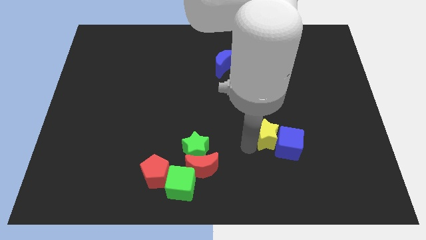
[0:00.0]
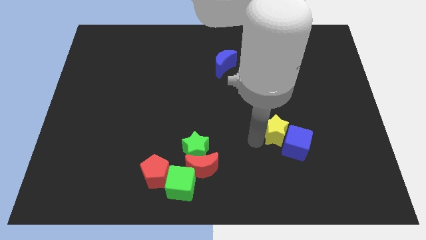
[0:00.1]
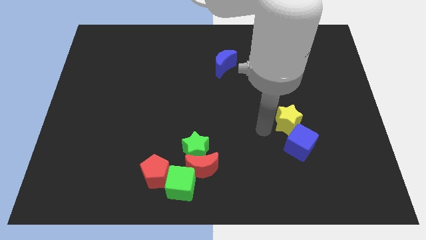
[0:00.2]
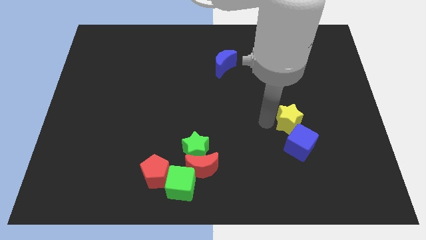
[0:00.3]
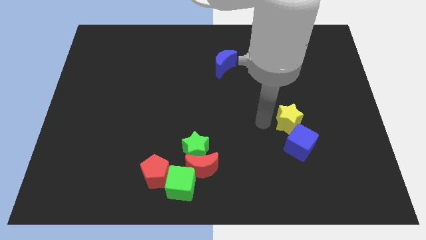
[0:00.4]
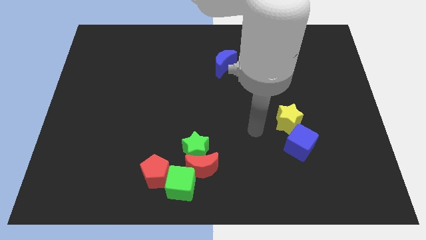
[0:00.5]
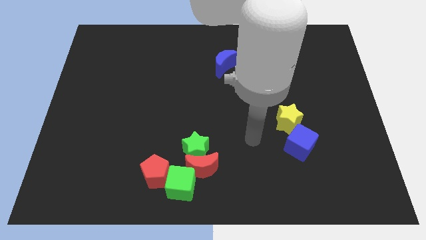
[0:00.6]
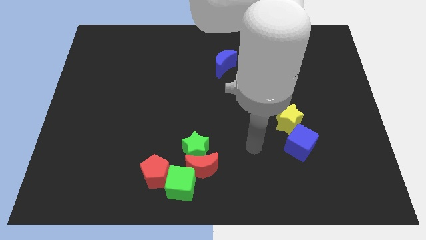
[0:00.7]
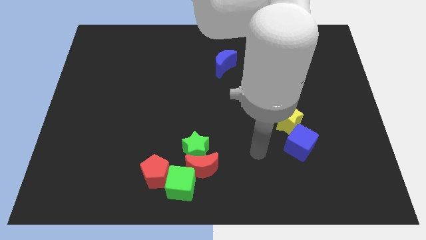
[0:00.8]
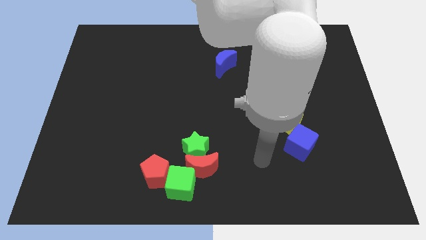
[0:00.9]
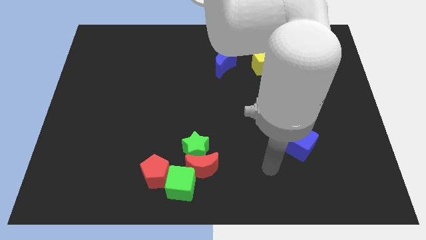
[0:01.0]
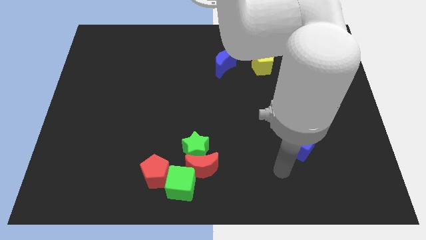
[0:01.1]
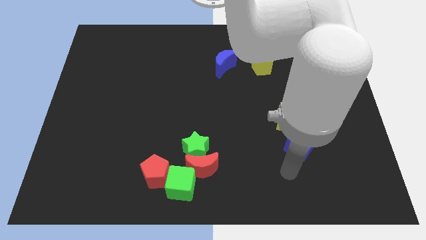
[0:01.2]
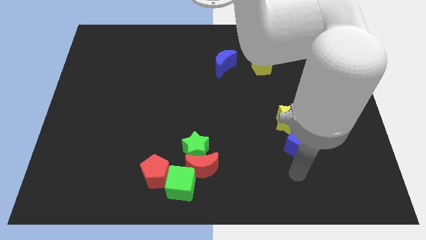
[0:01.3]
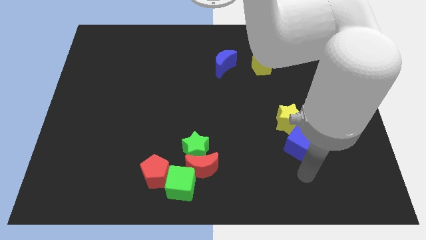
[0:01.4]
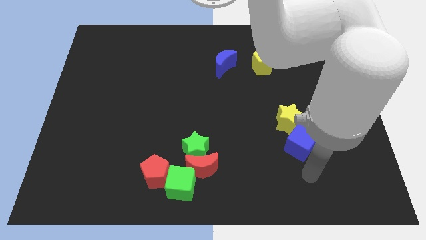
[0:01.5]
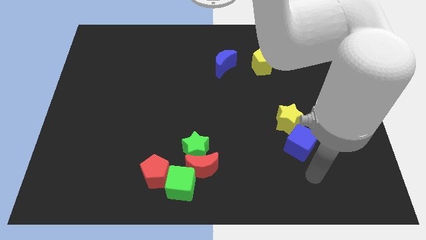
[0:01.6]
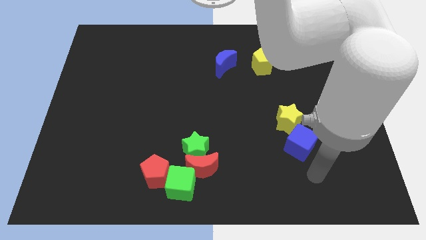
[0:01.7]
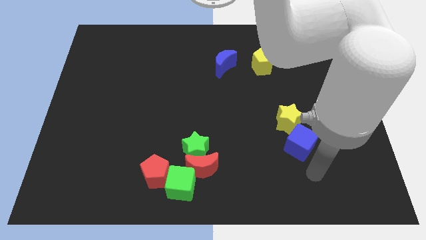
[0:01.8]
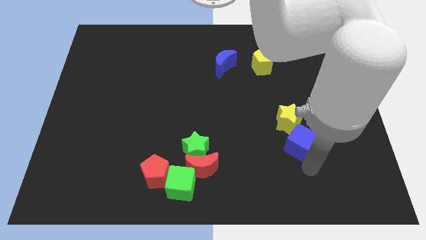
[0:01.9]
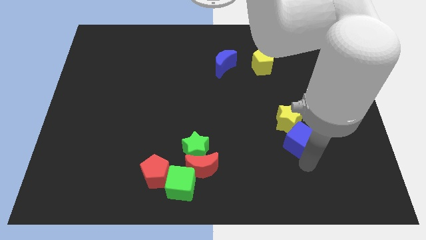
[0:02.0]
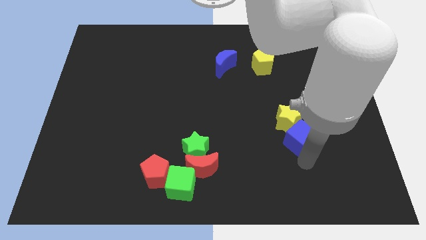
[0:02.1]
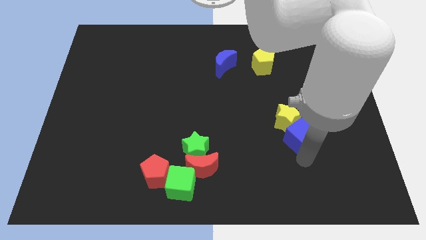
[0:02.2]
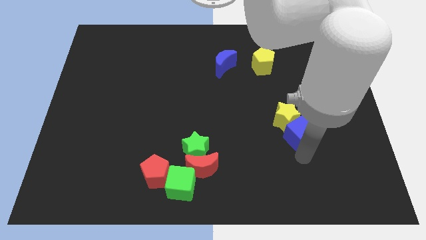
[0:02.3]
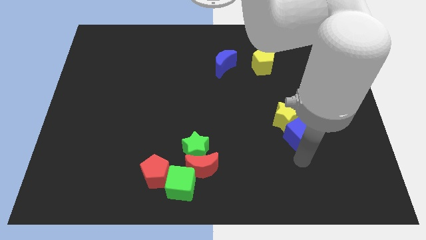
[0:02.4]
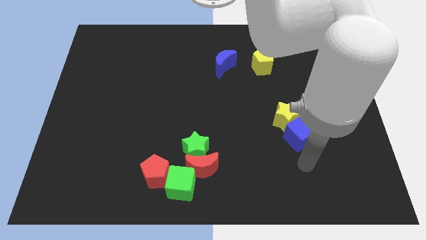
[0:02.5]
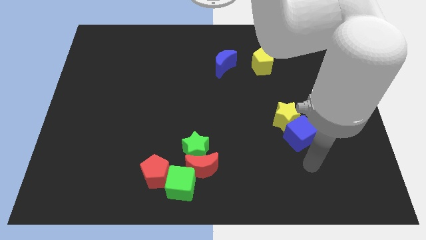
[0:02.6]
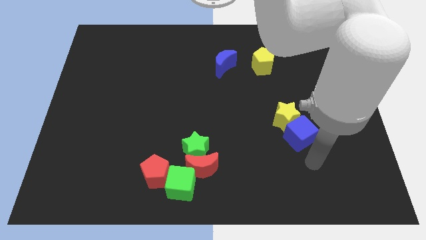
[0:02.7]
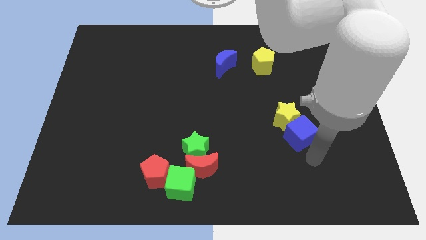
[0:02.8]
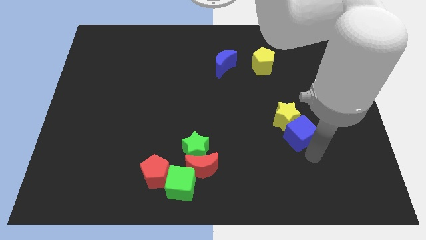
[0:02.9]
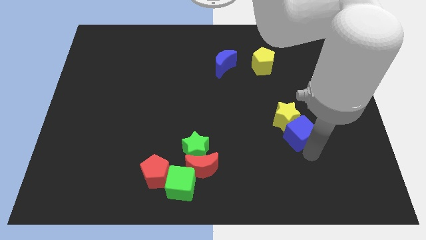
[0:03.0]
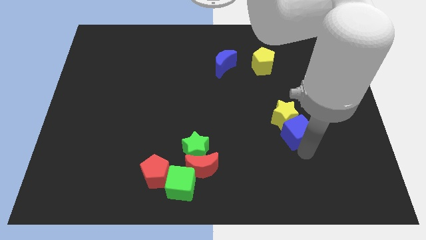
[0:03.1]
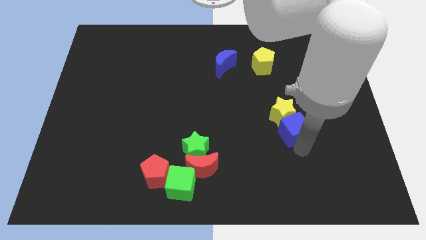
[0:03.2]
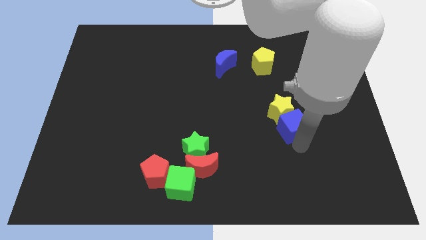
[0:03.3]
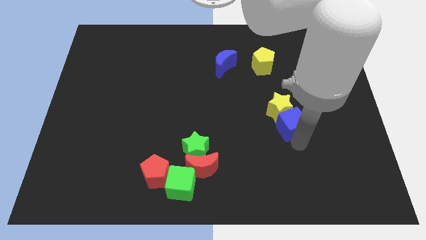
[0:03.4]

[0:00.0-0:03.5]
move the blue cube along with the yellow star towards the yellow pentagon

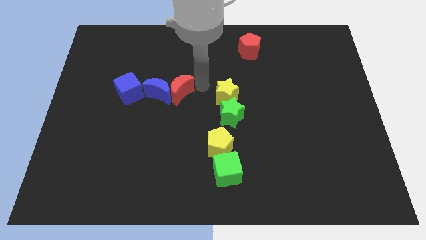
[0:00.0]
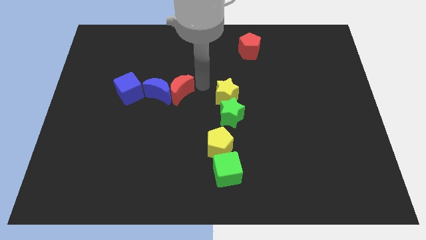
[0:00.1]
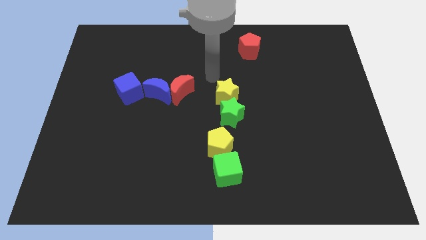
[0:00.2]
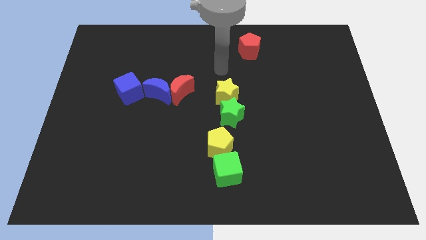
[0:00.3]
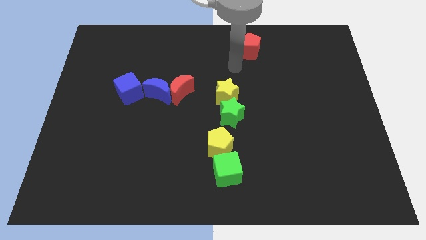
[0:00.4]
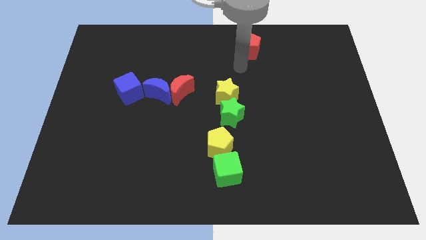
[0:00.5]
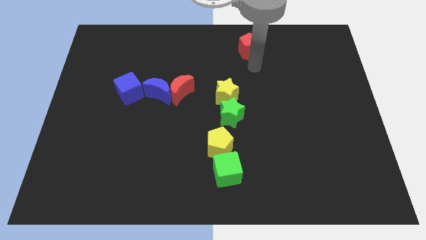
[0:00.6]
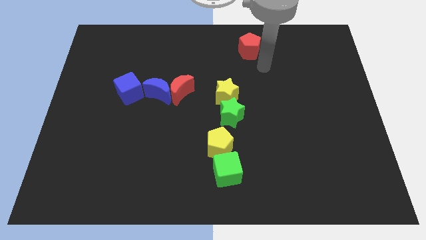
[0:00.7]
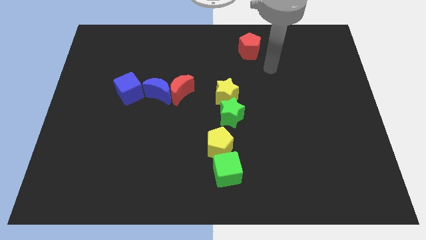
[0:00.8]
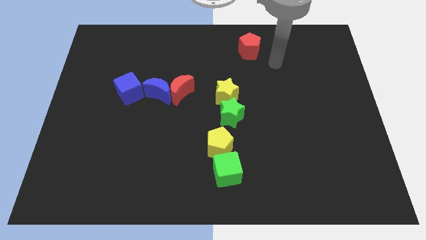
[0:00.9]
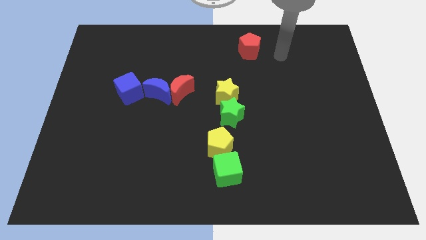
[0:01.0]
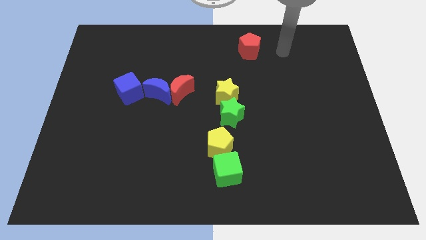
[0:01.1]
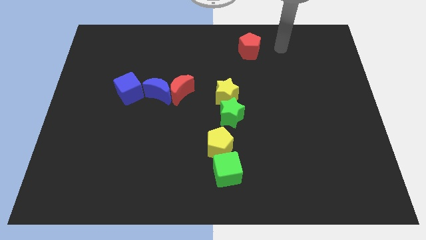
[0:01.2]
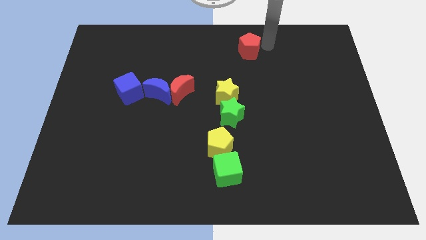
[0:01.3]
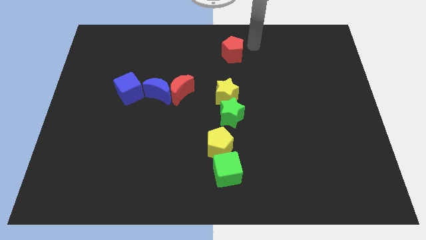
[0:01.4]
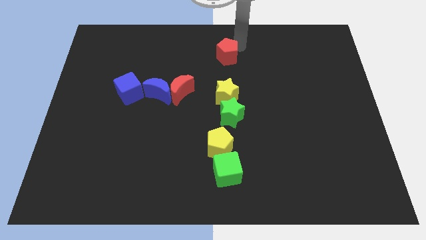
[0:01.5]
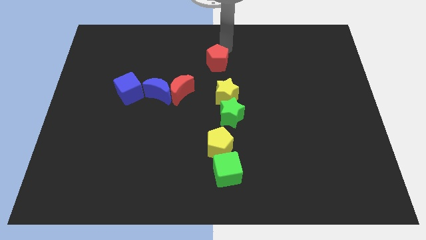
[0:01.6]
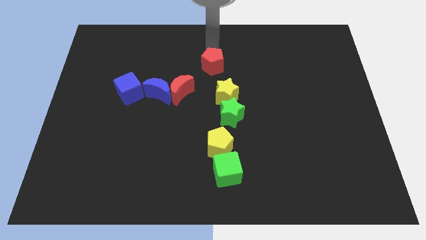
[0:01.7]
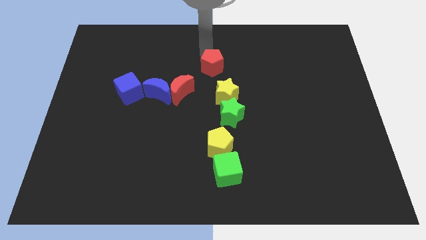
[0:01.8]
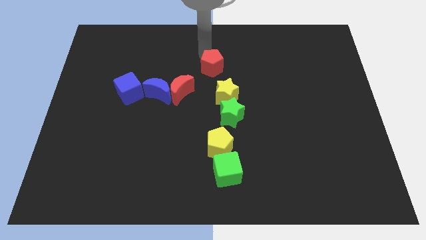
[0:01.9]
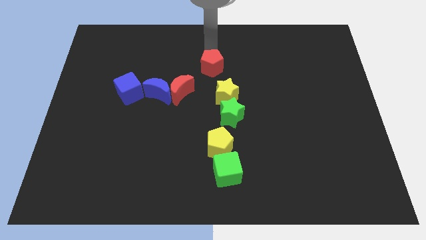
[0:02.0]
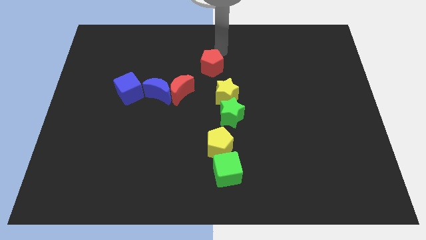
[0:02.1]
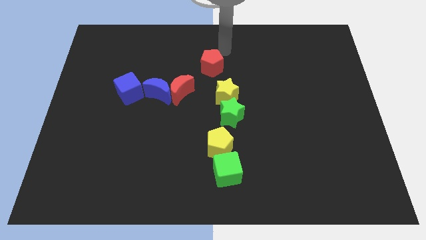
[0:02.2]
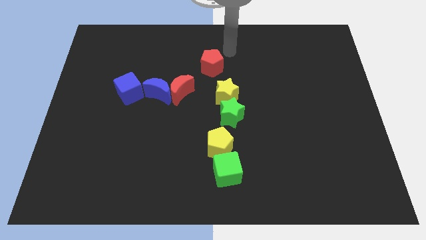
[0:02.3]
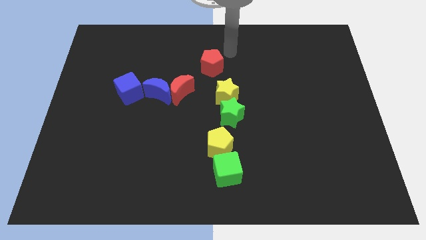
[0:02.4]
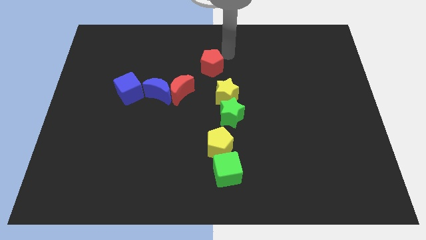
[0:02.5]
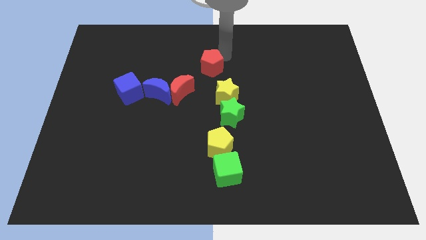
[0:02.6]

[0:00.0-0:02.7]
place the red pentagon to the top right of the red moon

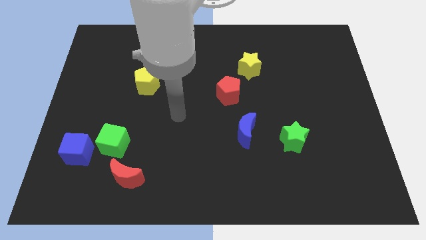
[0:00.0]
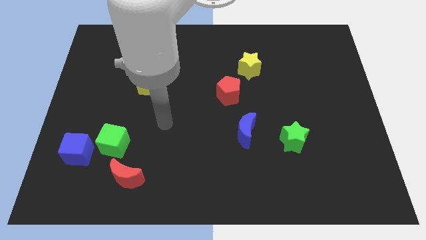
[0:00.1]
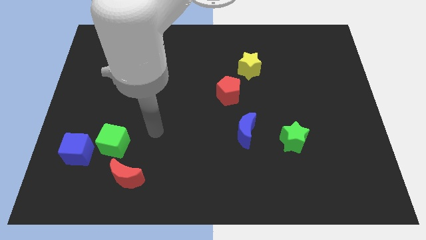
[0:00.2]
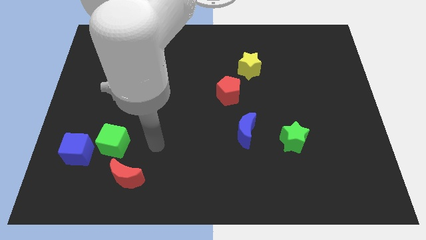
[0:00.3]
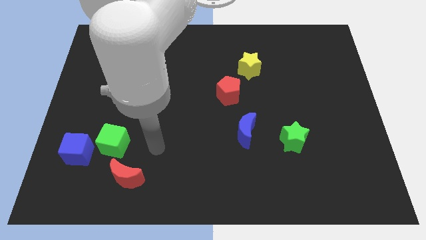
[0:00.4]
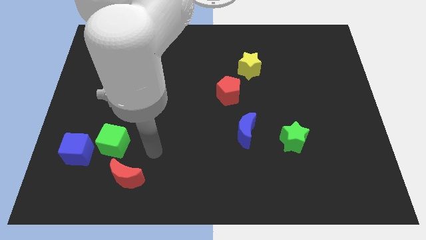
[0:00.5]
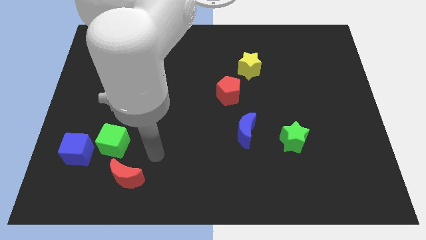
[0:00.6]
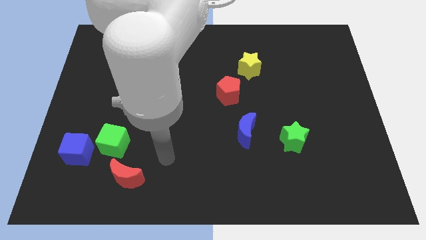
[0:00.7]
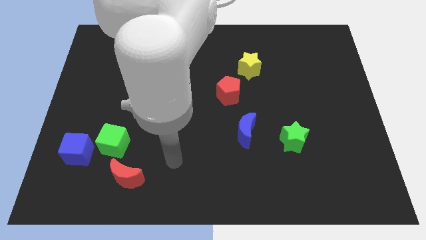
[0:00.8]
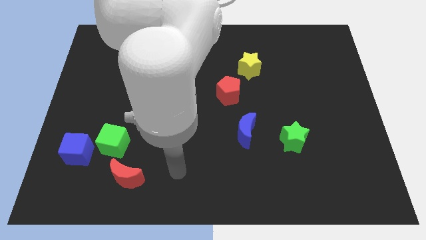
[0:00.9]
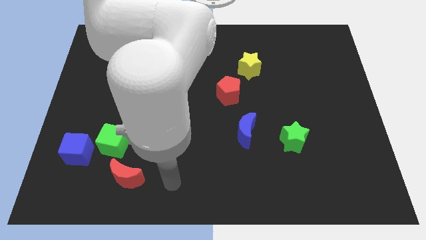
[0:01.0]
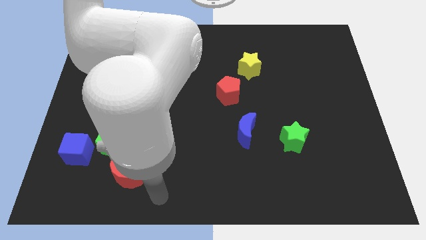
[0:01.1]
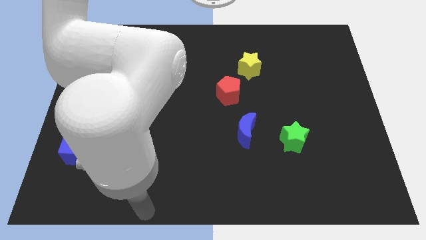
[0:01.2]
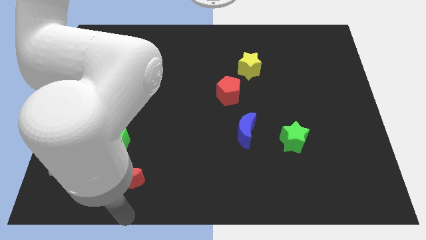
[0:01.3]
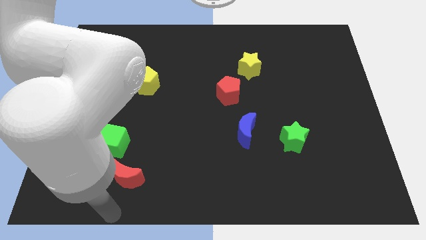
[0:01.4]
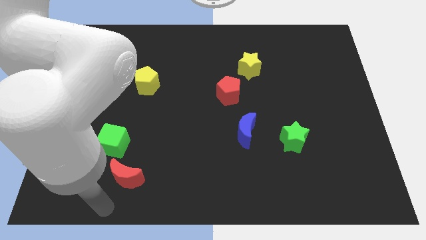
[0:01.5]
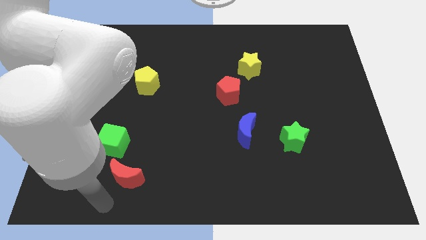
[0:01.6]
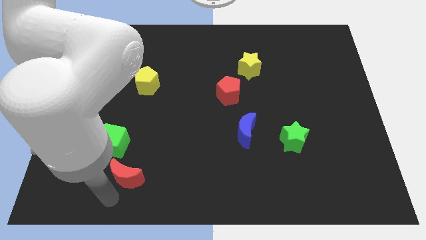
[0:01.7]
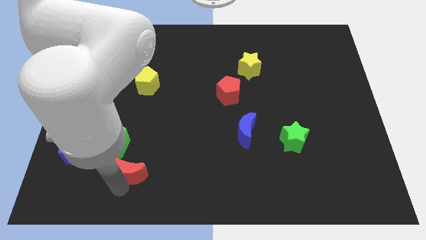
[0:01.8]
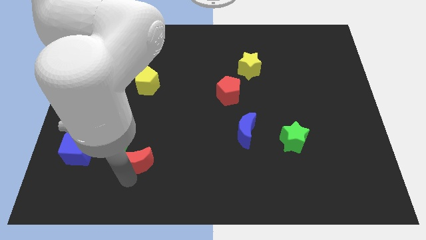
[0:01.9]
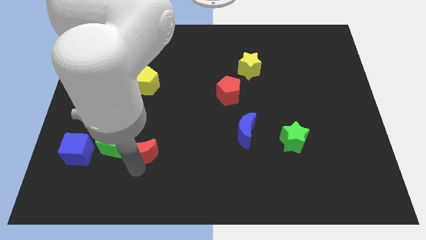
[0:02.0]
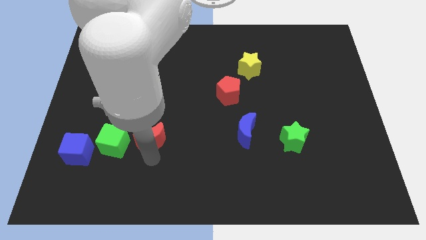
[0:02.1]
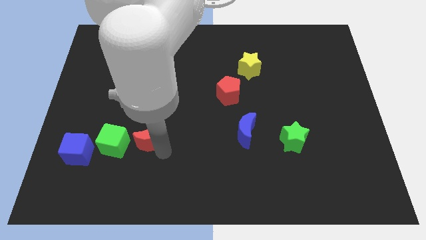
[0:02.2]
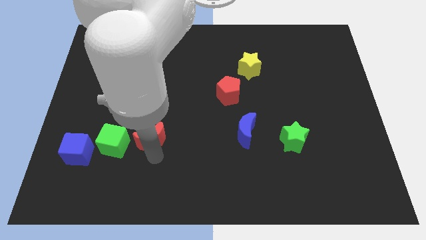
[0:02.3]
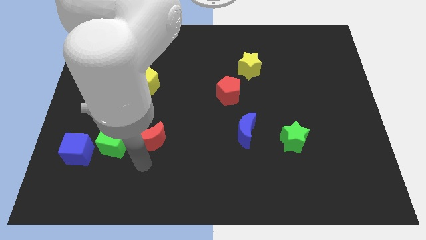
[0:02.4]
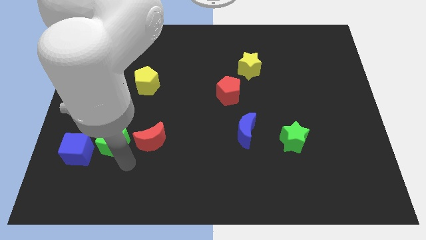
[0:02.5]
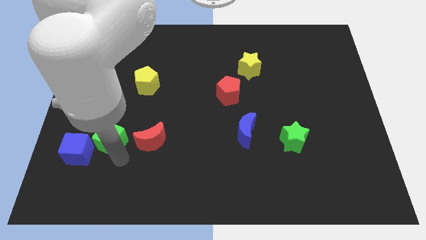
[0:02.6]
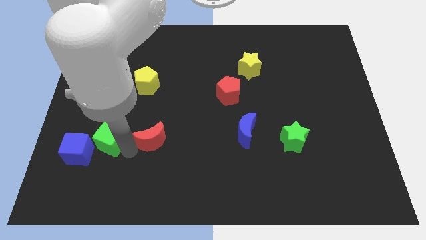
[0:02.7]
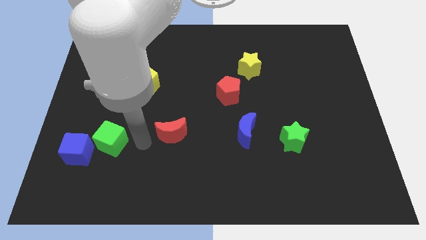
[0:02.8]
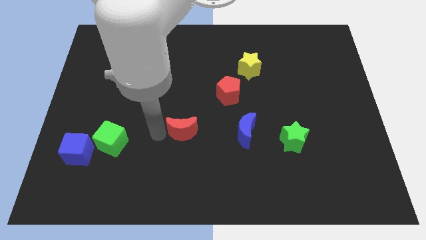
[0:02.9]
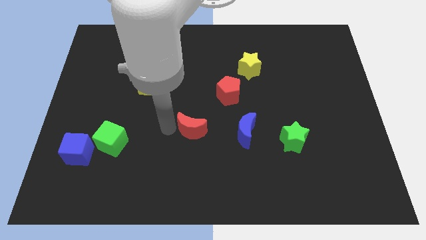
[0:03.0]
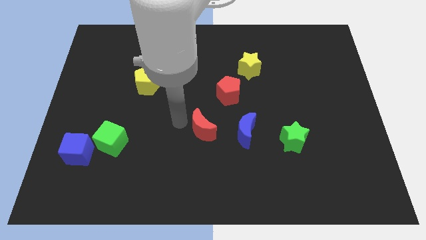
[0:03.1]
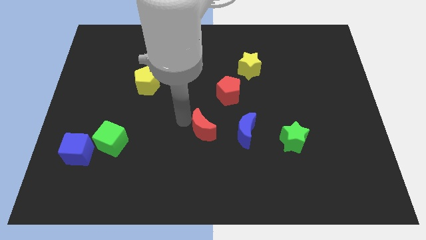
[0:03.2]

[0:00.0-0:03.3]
place the red crescent at the center of the board
